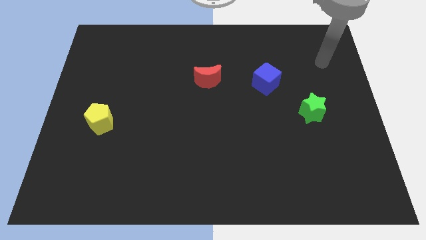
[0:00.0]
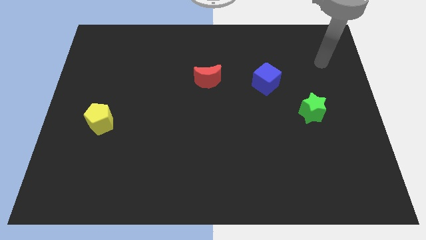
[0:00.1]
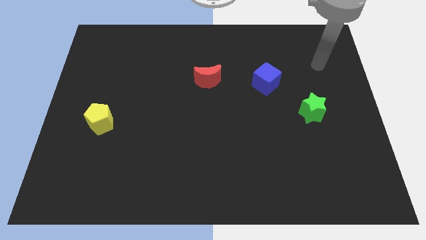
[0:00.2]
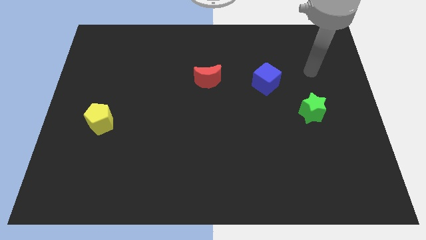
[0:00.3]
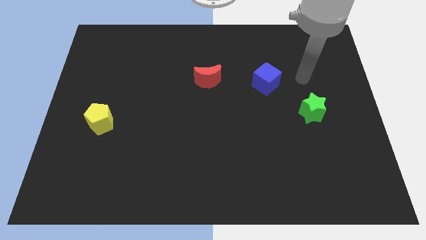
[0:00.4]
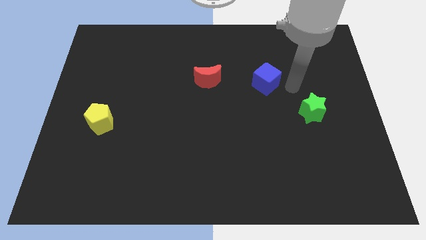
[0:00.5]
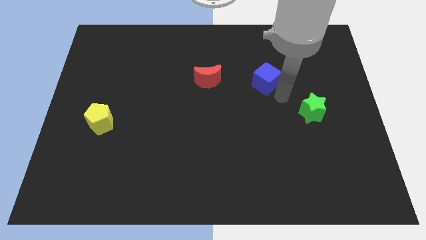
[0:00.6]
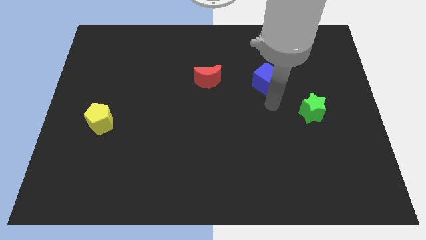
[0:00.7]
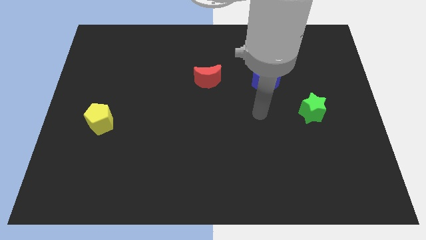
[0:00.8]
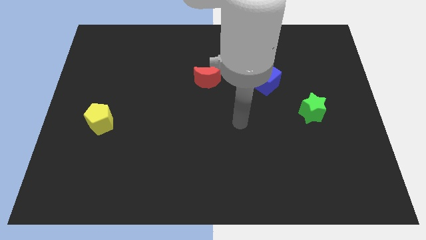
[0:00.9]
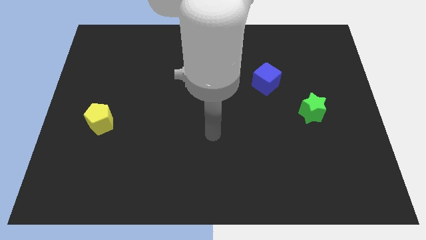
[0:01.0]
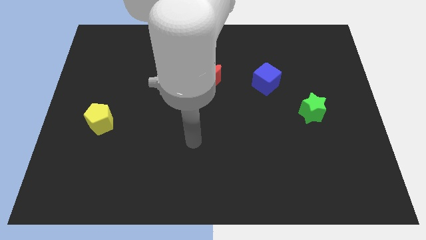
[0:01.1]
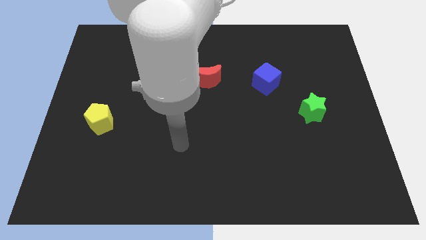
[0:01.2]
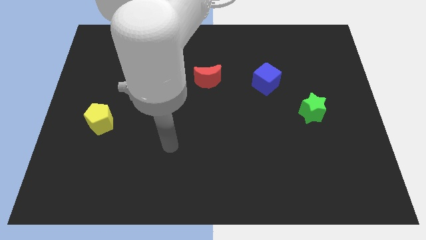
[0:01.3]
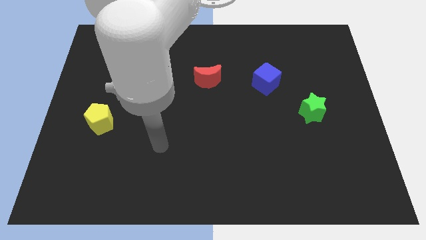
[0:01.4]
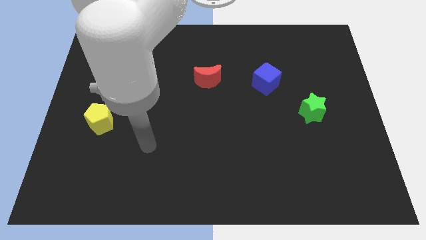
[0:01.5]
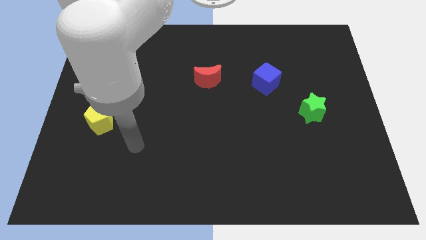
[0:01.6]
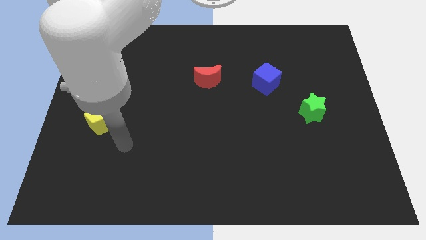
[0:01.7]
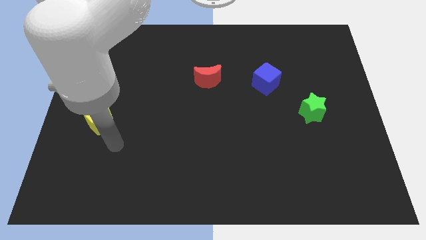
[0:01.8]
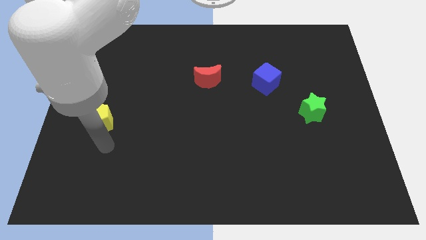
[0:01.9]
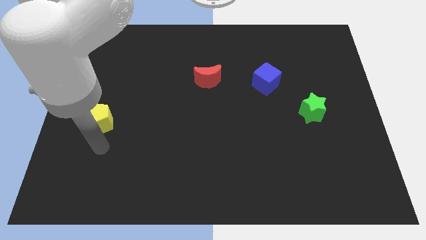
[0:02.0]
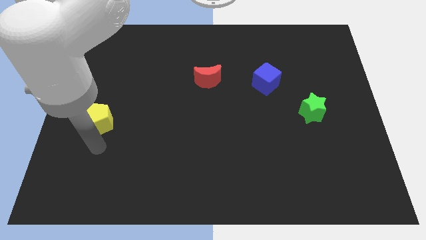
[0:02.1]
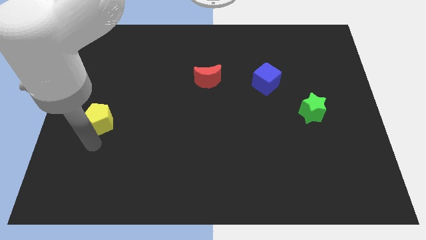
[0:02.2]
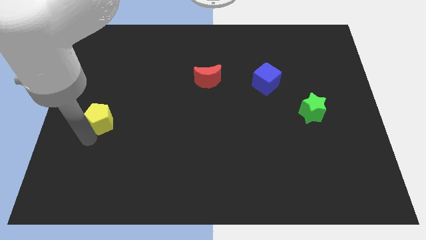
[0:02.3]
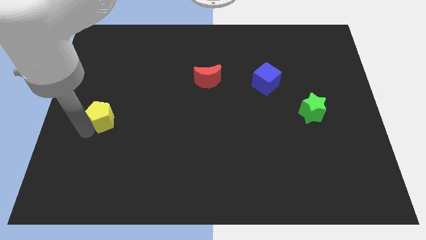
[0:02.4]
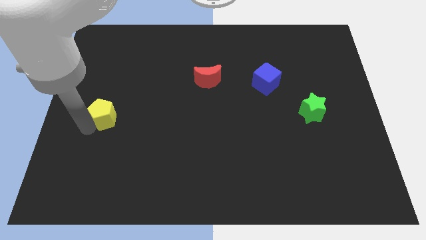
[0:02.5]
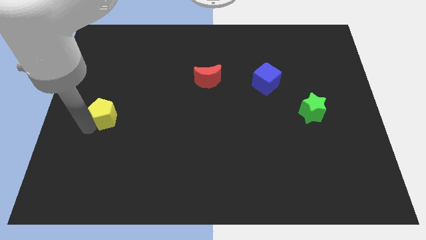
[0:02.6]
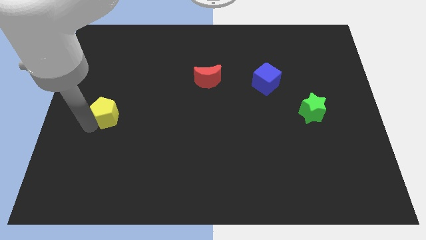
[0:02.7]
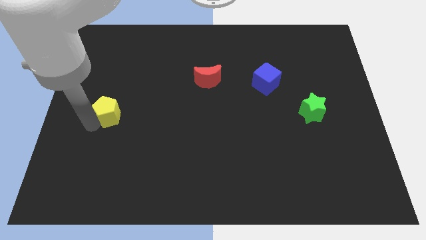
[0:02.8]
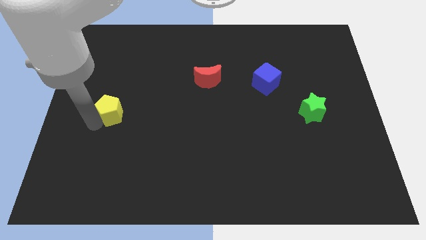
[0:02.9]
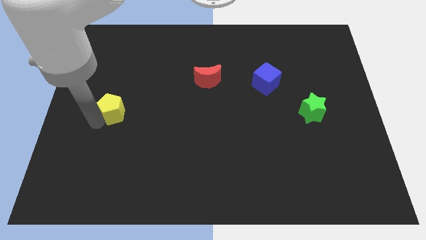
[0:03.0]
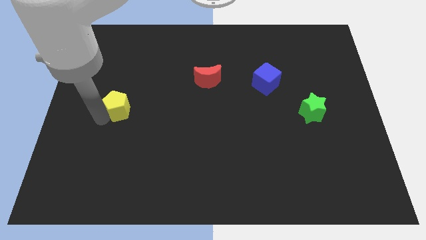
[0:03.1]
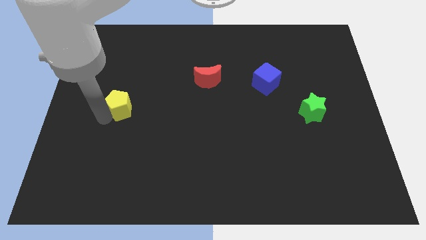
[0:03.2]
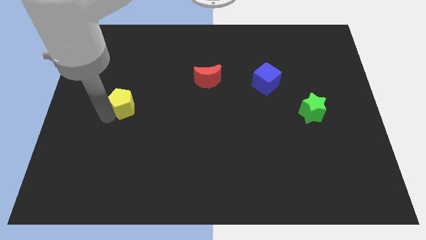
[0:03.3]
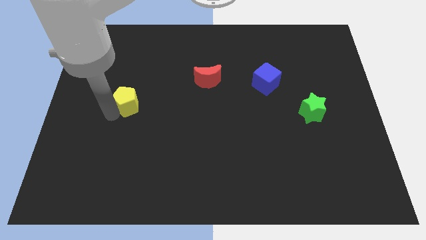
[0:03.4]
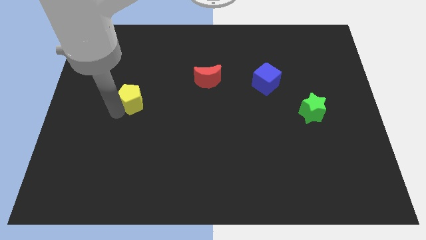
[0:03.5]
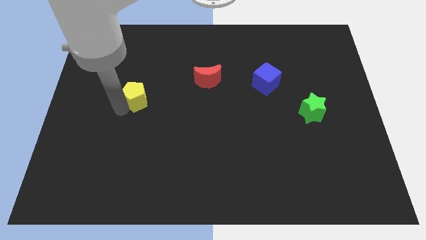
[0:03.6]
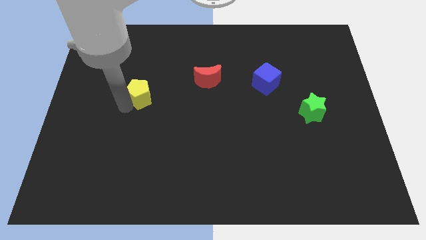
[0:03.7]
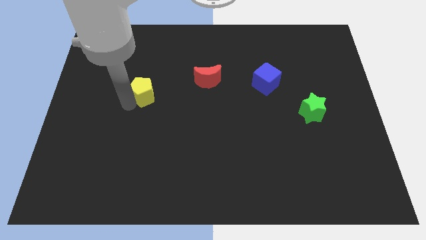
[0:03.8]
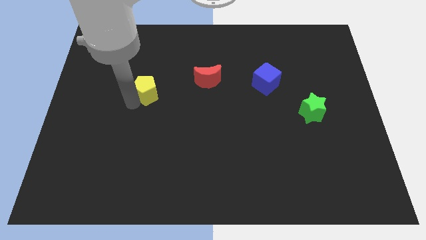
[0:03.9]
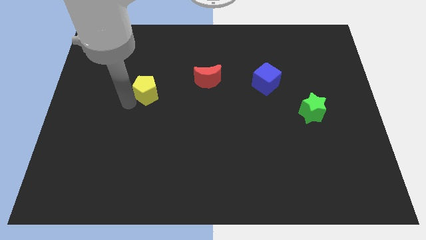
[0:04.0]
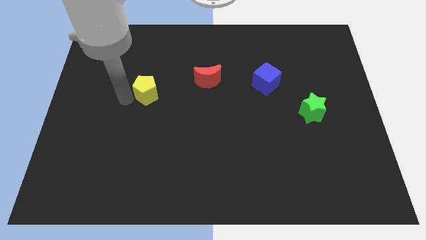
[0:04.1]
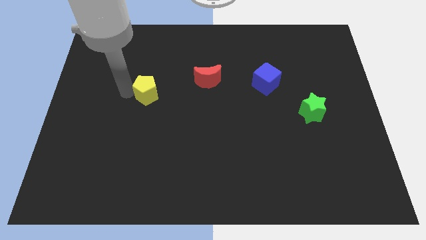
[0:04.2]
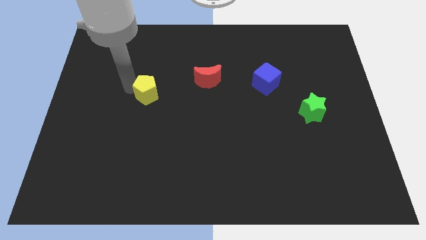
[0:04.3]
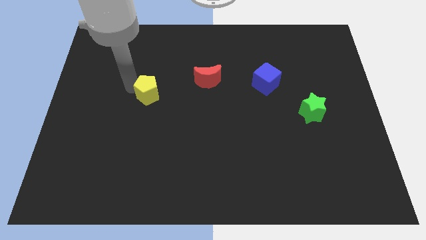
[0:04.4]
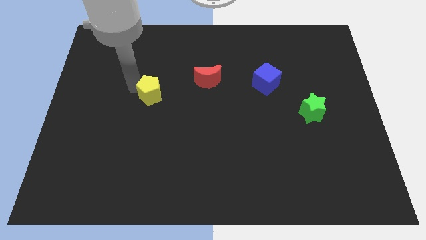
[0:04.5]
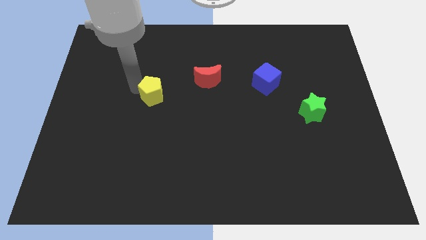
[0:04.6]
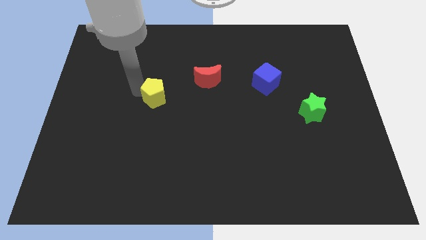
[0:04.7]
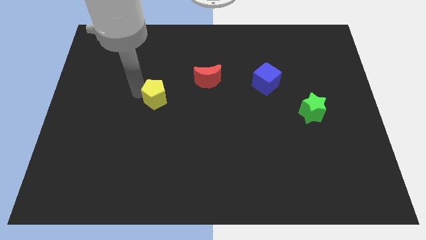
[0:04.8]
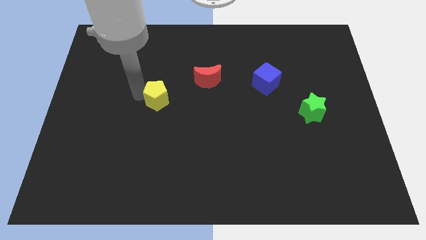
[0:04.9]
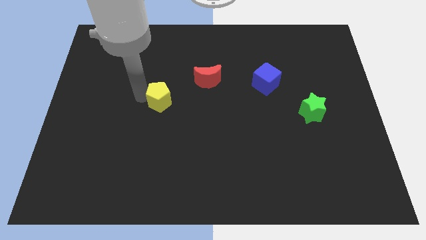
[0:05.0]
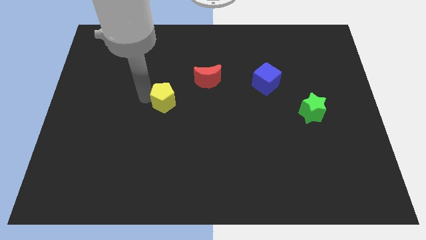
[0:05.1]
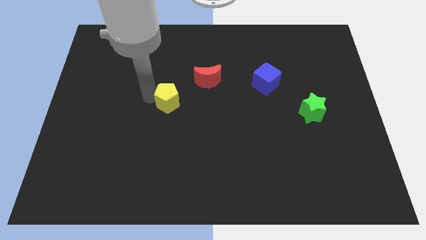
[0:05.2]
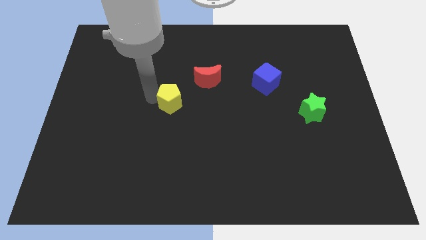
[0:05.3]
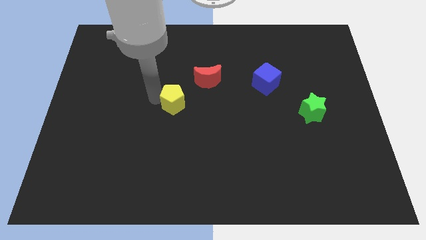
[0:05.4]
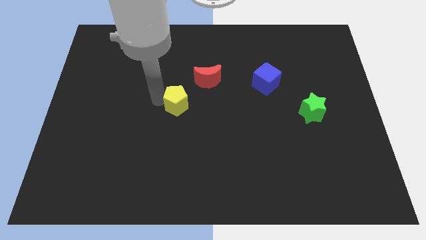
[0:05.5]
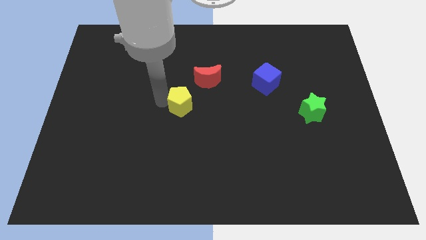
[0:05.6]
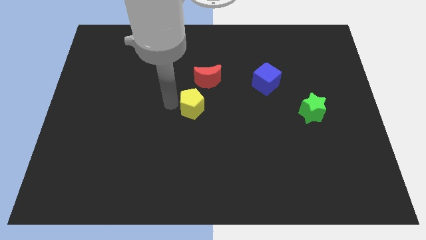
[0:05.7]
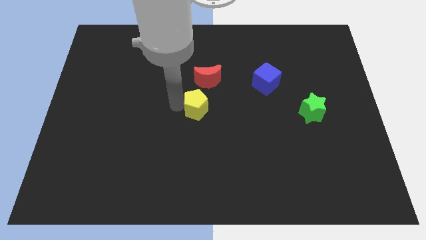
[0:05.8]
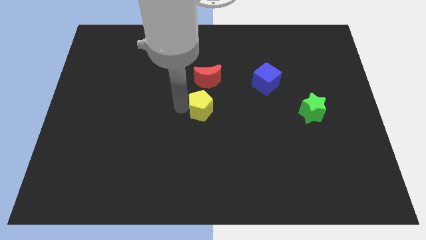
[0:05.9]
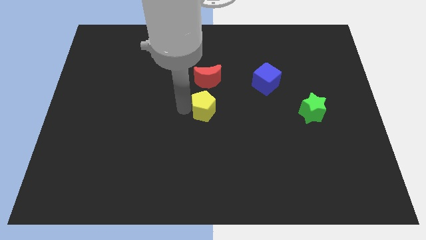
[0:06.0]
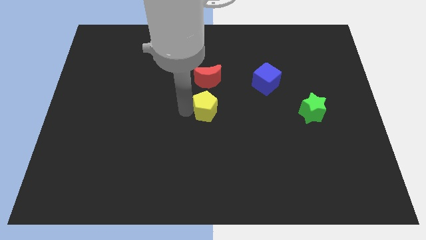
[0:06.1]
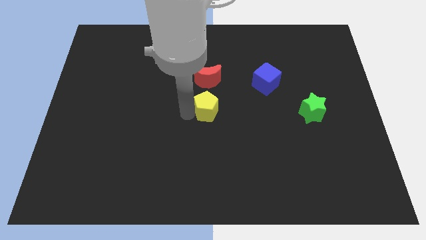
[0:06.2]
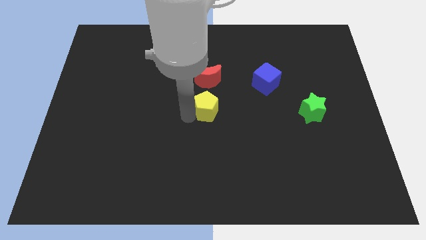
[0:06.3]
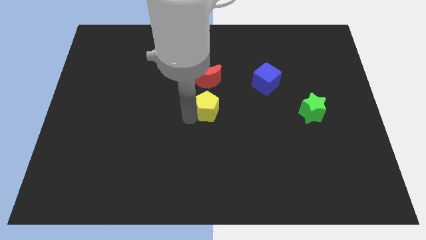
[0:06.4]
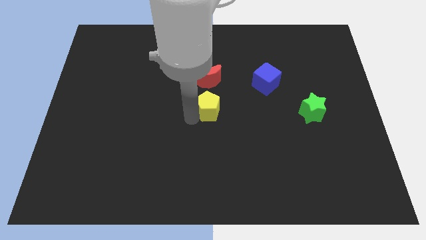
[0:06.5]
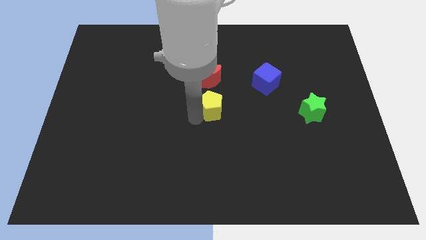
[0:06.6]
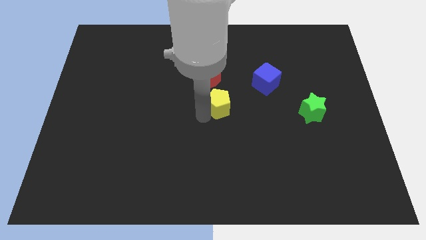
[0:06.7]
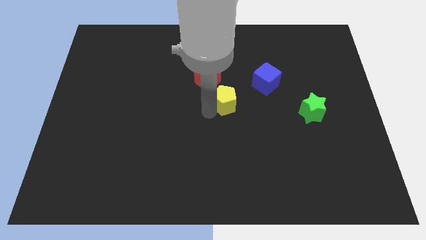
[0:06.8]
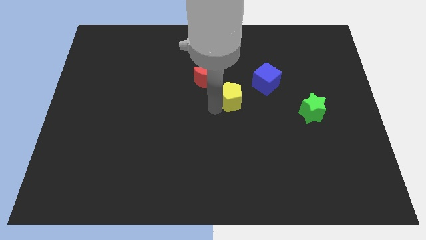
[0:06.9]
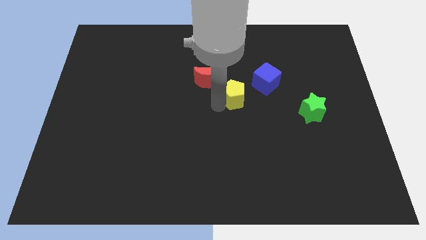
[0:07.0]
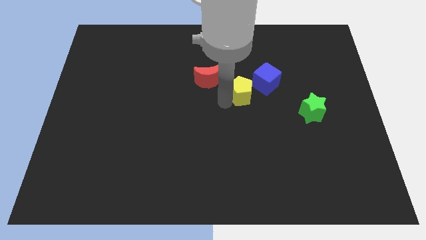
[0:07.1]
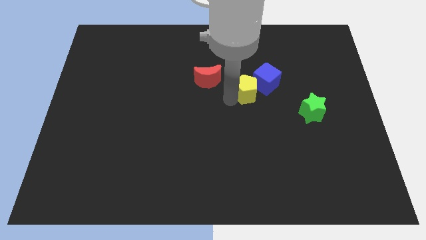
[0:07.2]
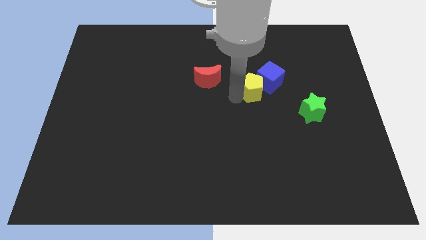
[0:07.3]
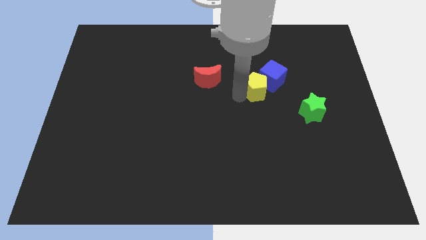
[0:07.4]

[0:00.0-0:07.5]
push the yellow pentagon towards the blue block

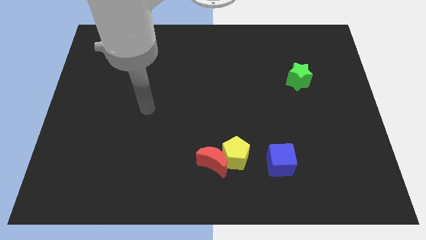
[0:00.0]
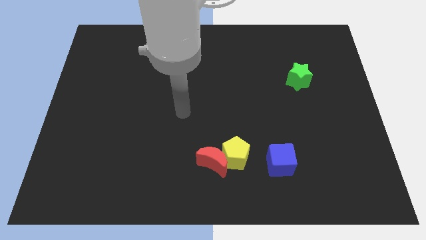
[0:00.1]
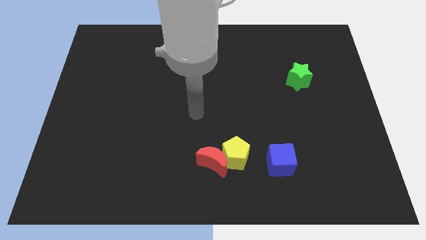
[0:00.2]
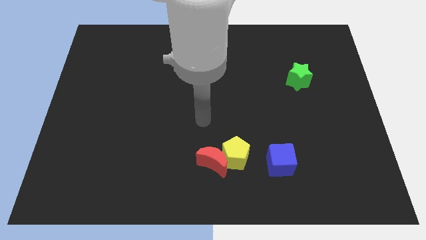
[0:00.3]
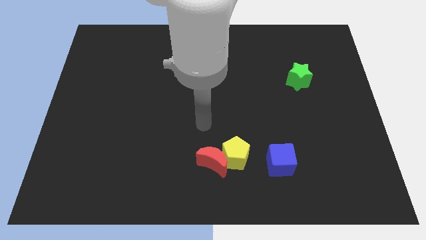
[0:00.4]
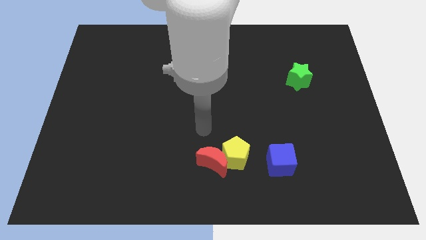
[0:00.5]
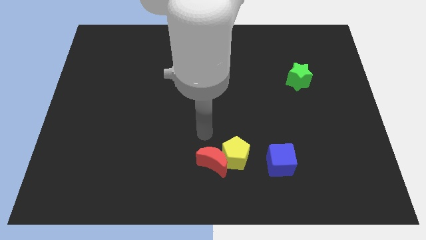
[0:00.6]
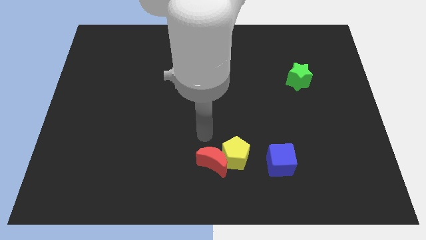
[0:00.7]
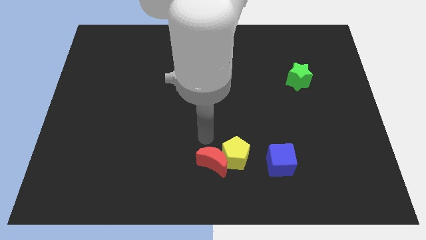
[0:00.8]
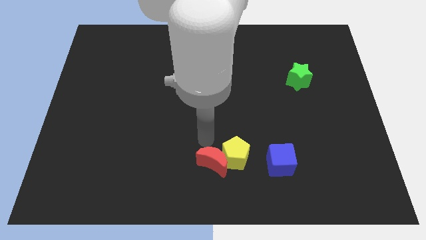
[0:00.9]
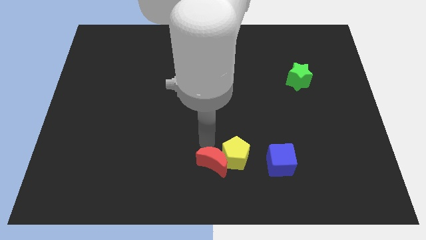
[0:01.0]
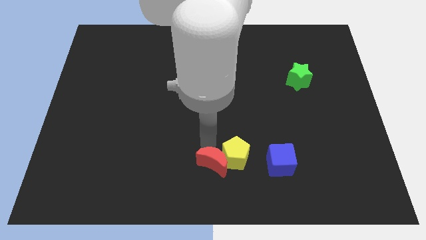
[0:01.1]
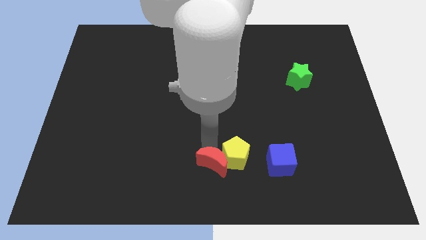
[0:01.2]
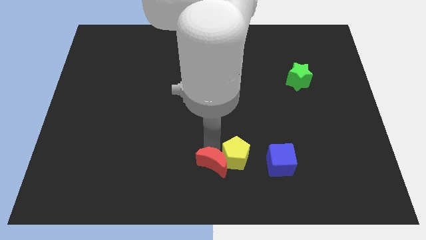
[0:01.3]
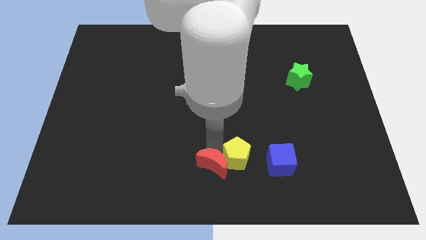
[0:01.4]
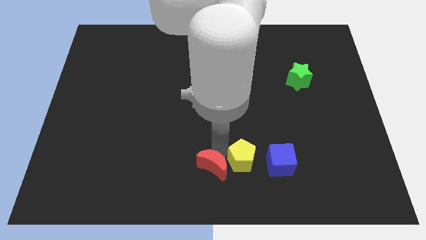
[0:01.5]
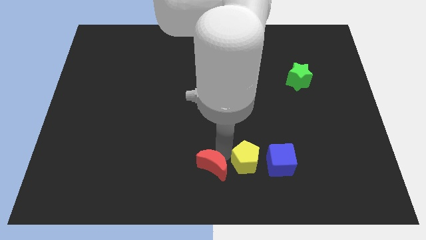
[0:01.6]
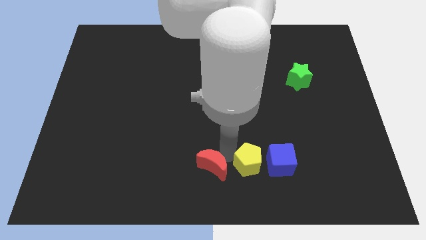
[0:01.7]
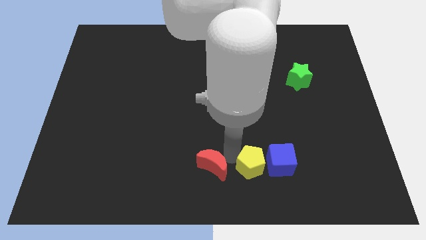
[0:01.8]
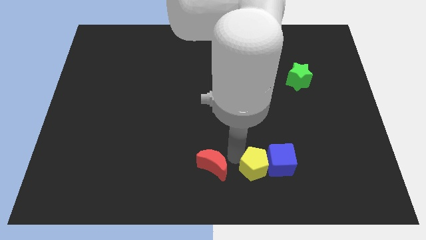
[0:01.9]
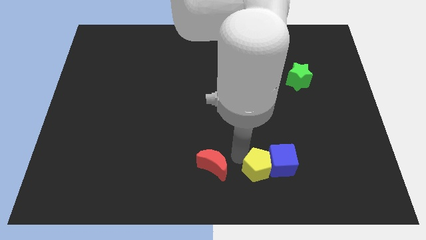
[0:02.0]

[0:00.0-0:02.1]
slide the pentagon next to the blue block
